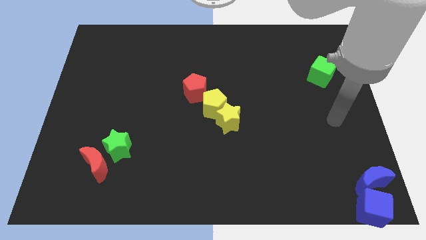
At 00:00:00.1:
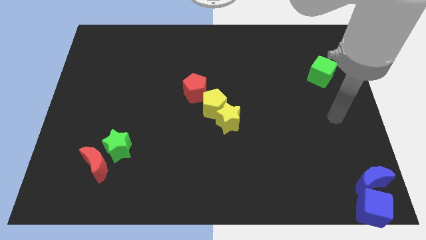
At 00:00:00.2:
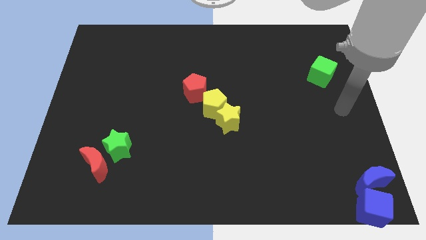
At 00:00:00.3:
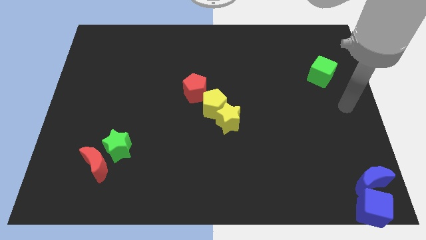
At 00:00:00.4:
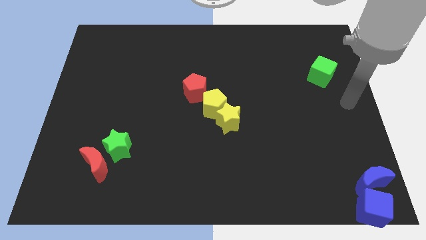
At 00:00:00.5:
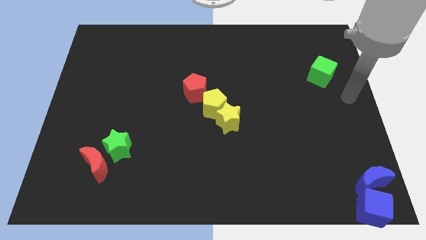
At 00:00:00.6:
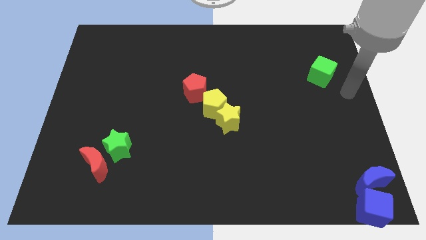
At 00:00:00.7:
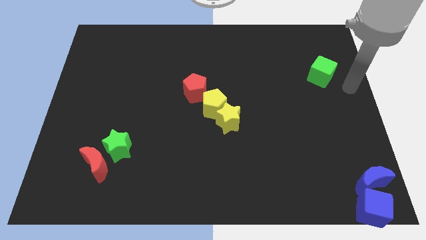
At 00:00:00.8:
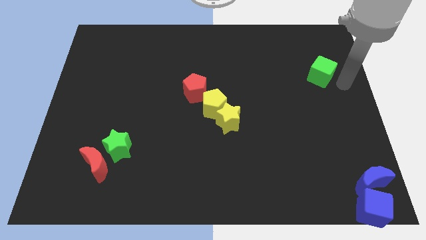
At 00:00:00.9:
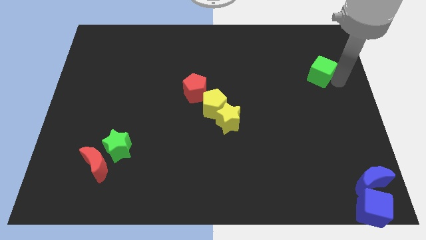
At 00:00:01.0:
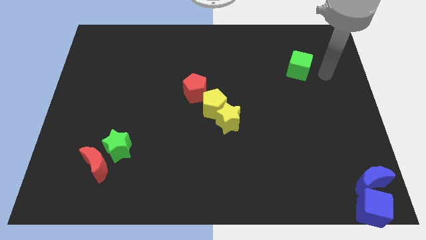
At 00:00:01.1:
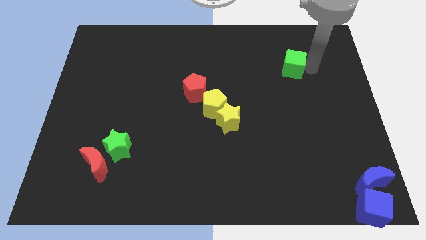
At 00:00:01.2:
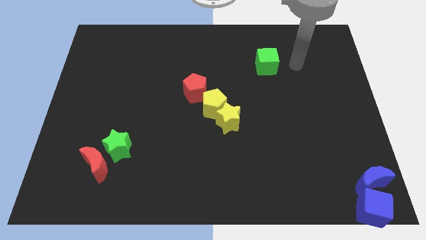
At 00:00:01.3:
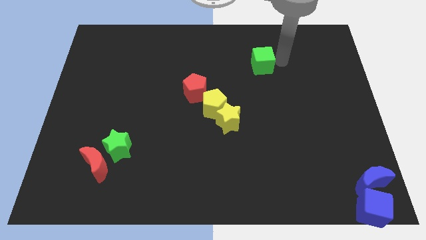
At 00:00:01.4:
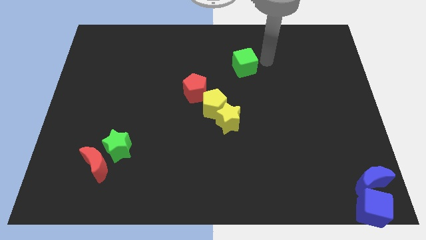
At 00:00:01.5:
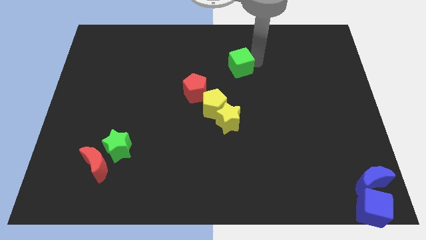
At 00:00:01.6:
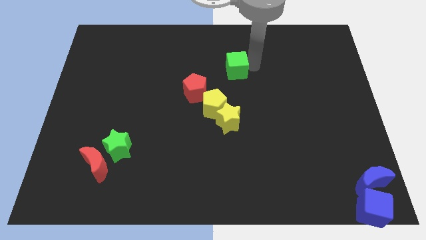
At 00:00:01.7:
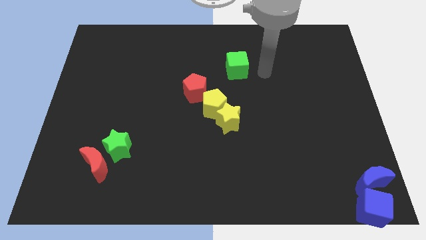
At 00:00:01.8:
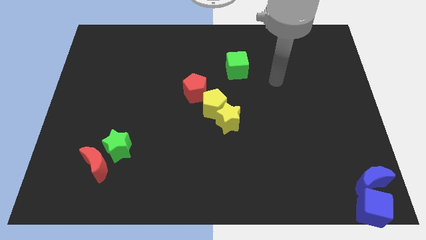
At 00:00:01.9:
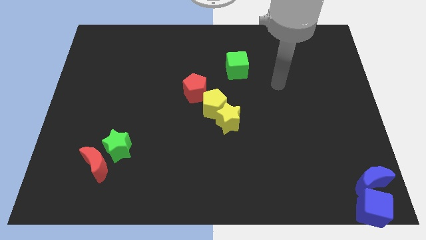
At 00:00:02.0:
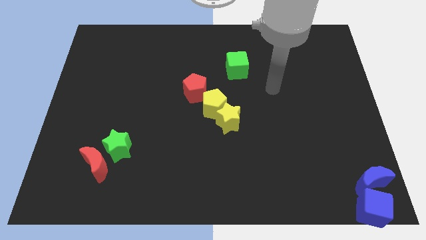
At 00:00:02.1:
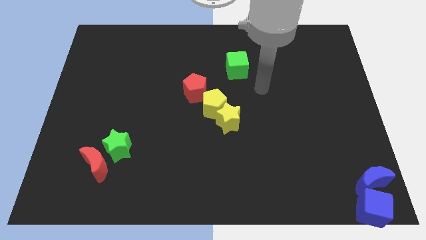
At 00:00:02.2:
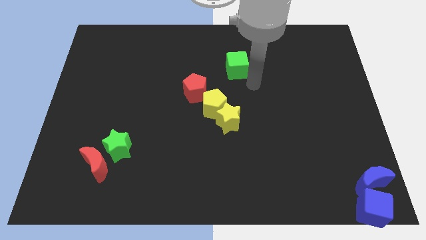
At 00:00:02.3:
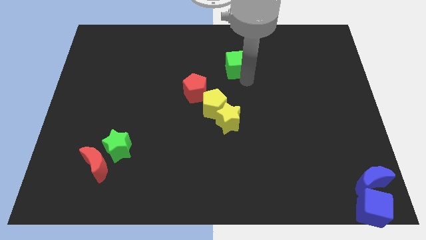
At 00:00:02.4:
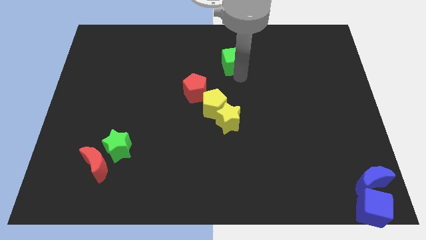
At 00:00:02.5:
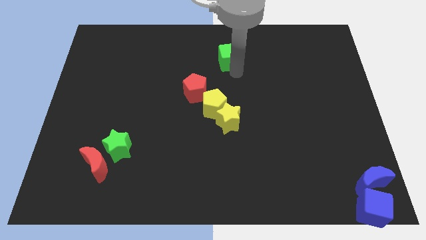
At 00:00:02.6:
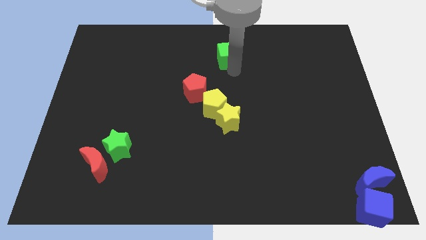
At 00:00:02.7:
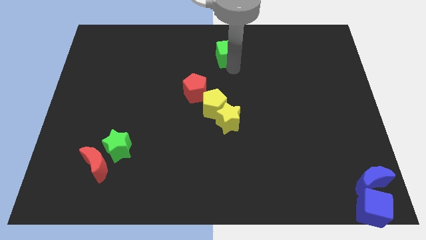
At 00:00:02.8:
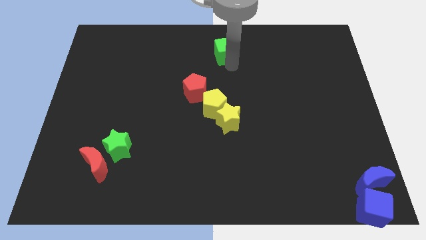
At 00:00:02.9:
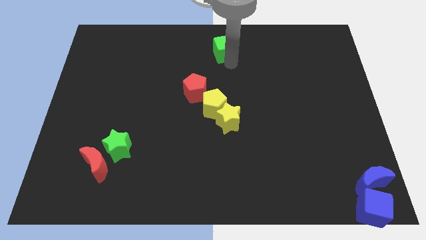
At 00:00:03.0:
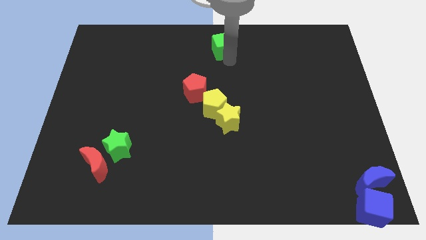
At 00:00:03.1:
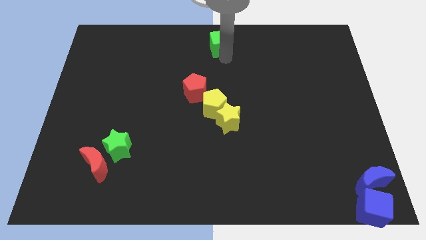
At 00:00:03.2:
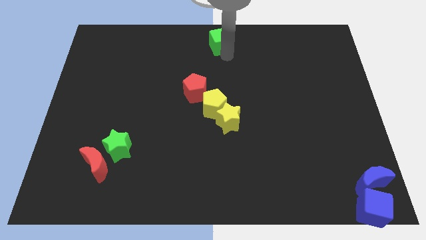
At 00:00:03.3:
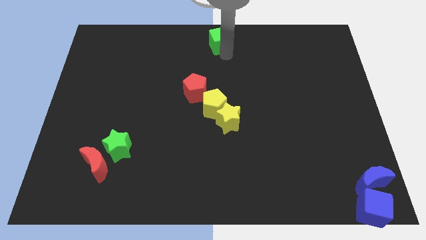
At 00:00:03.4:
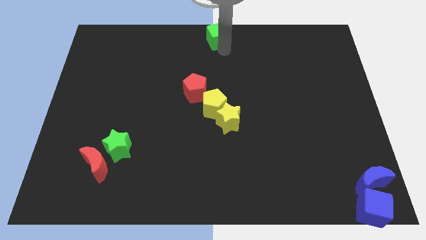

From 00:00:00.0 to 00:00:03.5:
push the green cube to the top center of the board

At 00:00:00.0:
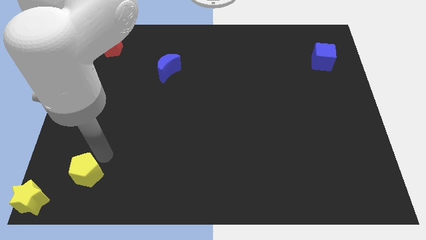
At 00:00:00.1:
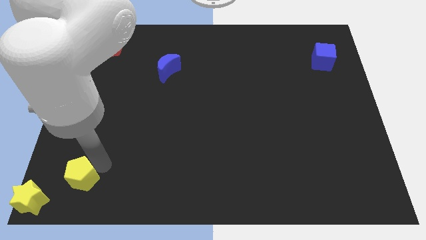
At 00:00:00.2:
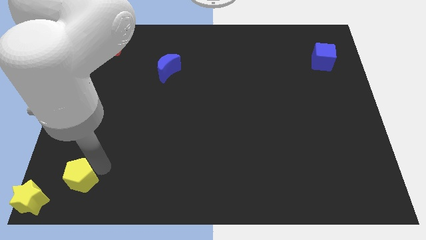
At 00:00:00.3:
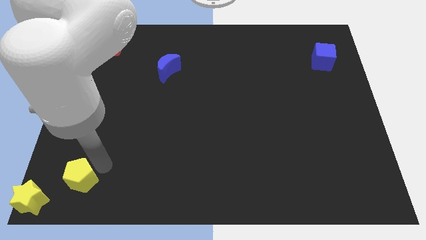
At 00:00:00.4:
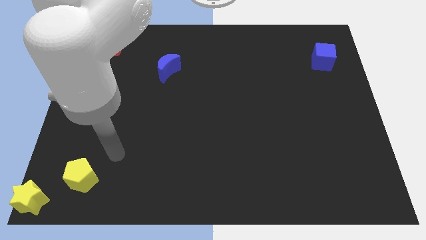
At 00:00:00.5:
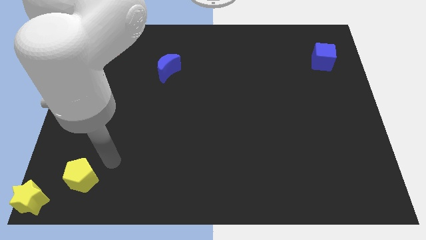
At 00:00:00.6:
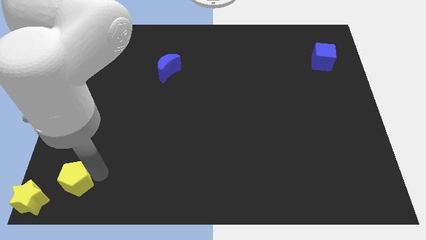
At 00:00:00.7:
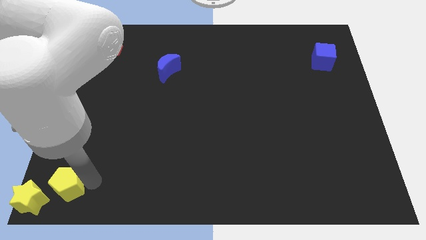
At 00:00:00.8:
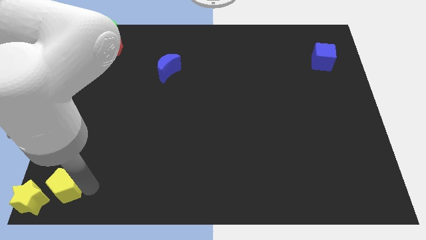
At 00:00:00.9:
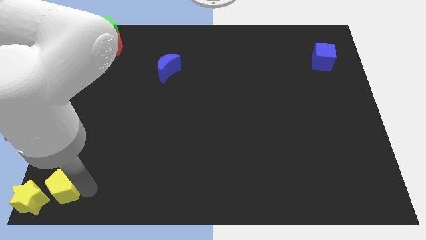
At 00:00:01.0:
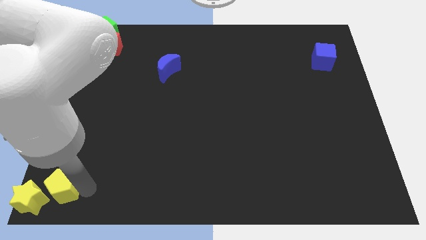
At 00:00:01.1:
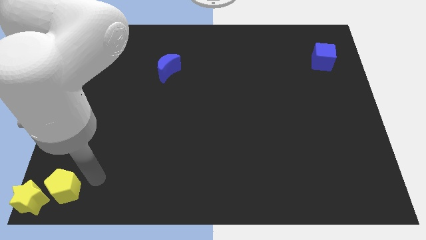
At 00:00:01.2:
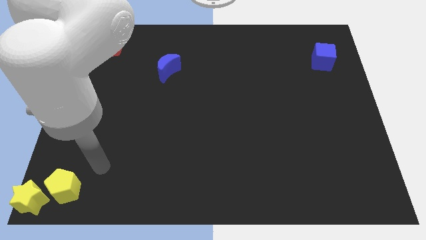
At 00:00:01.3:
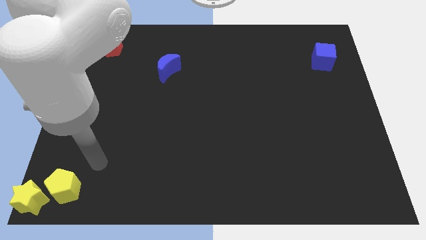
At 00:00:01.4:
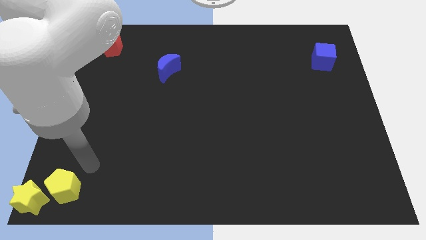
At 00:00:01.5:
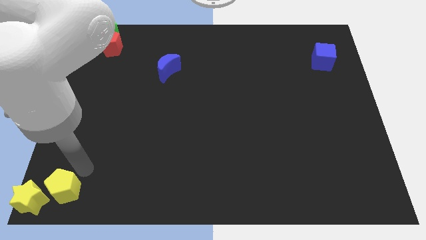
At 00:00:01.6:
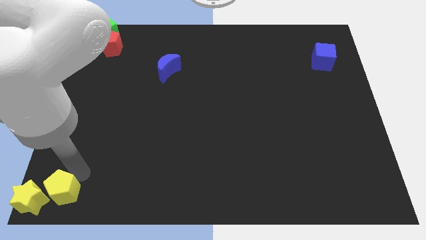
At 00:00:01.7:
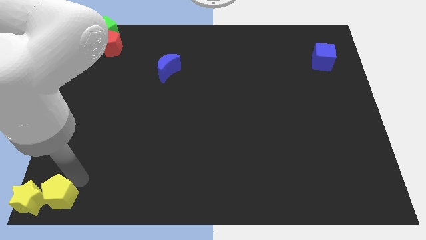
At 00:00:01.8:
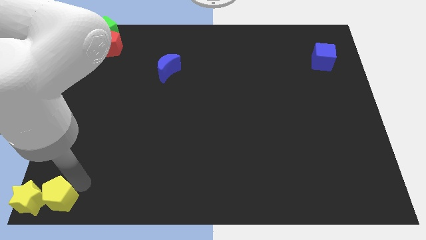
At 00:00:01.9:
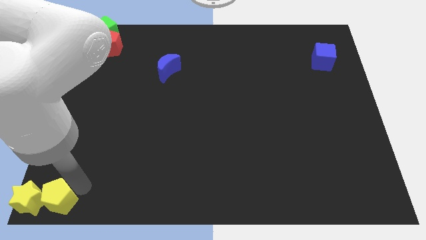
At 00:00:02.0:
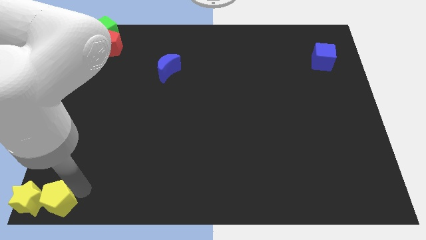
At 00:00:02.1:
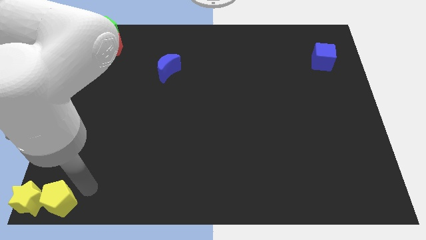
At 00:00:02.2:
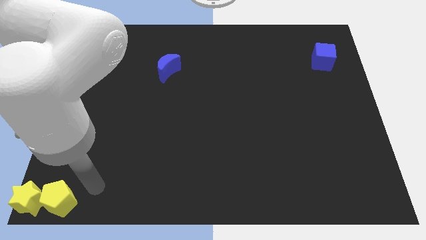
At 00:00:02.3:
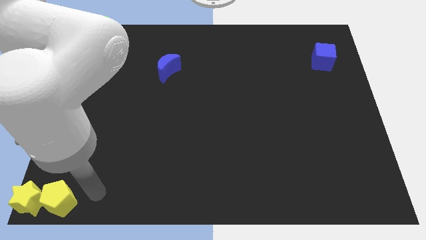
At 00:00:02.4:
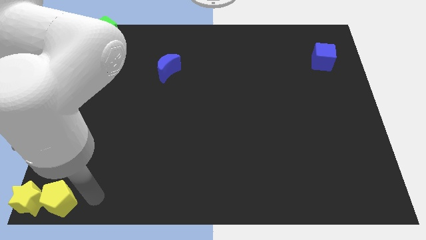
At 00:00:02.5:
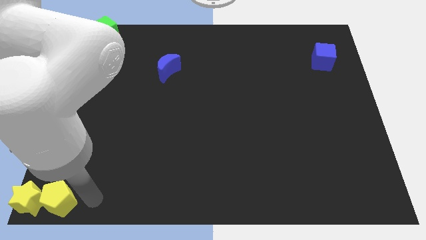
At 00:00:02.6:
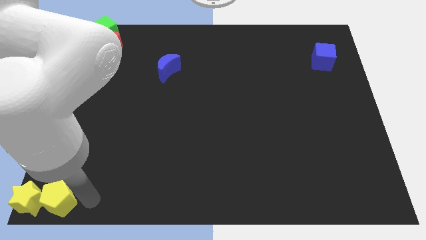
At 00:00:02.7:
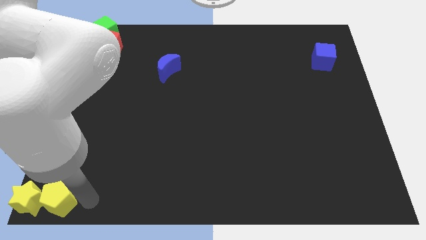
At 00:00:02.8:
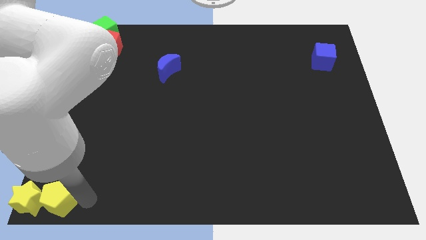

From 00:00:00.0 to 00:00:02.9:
push the yellow pentagon into the yellow star

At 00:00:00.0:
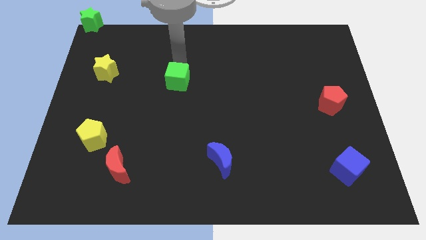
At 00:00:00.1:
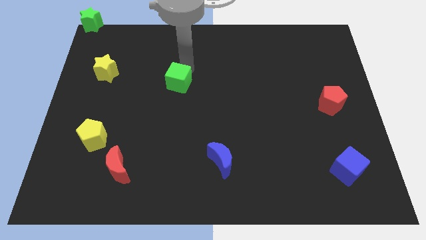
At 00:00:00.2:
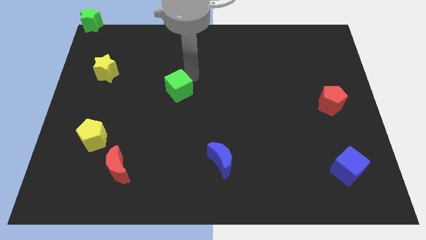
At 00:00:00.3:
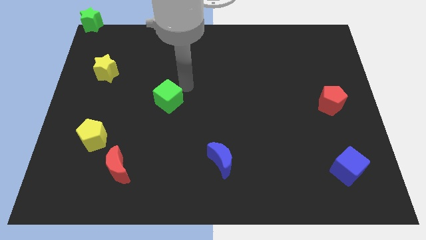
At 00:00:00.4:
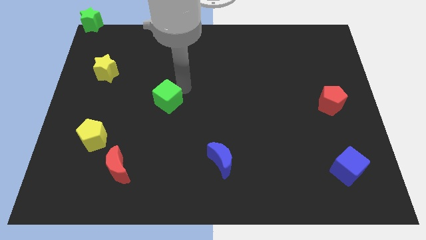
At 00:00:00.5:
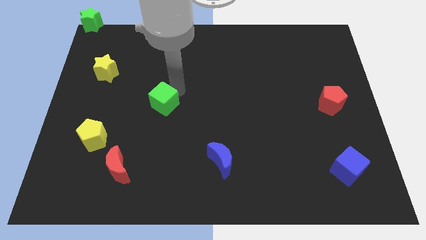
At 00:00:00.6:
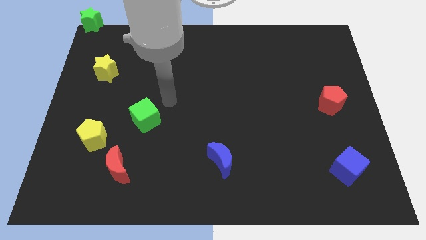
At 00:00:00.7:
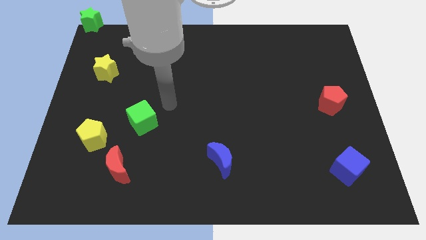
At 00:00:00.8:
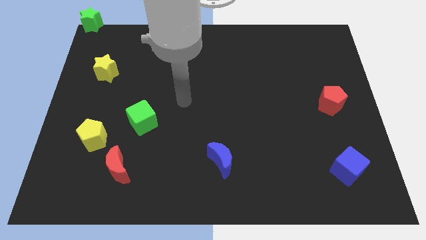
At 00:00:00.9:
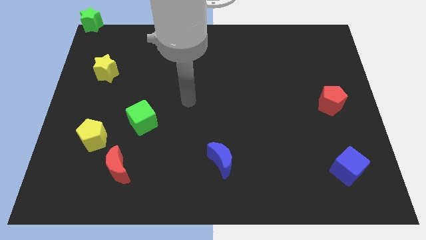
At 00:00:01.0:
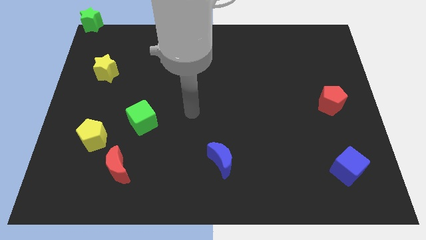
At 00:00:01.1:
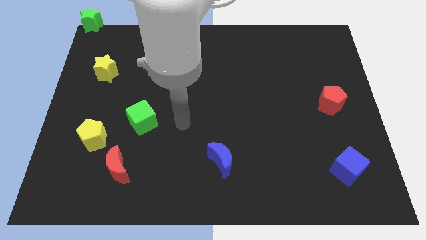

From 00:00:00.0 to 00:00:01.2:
push the green cube near the yellow pentagon

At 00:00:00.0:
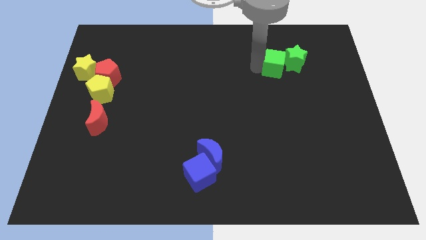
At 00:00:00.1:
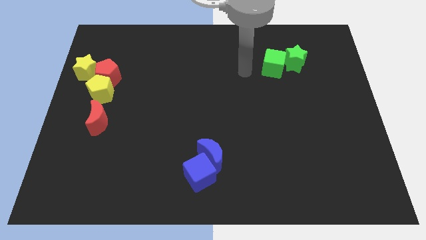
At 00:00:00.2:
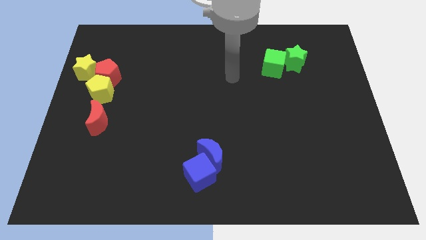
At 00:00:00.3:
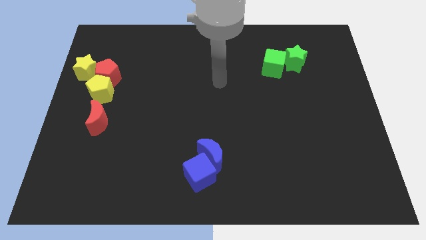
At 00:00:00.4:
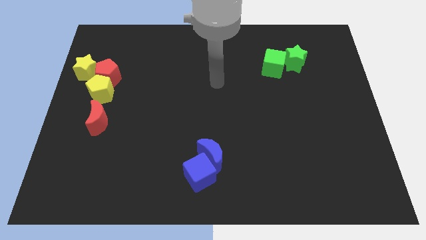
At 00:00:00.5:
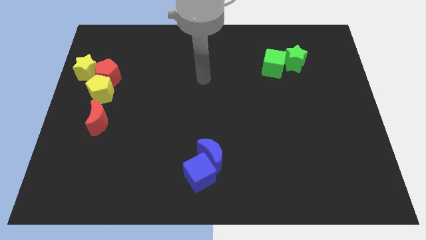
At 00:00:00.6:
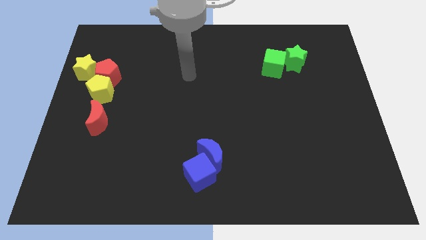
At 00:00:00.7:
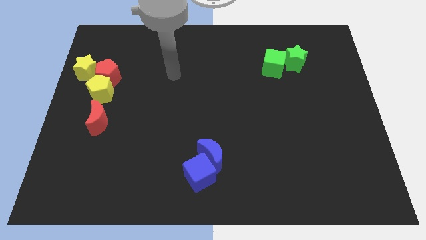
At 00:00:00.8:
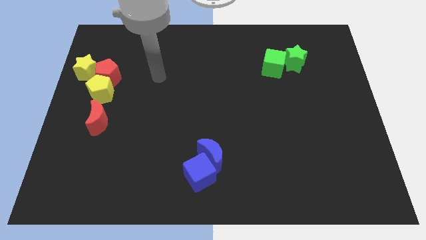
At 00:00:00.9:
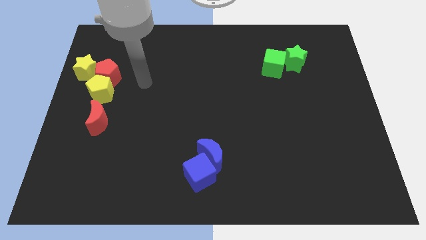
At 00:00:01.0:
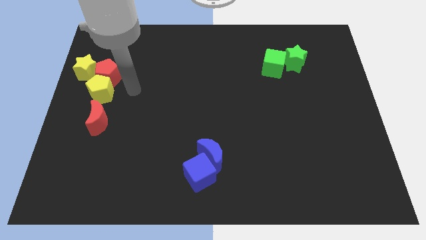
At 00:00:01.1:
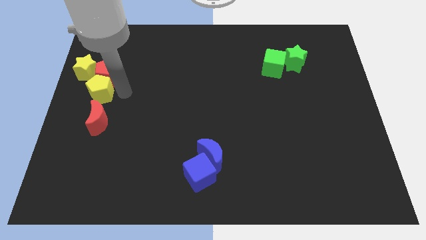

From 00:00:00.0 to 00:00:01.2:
move your hand between the green square and the yellow pentagon
